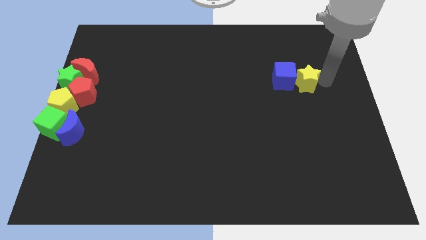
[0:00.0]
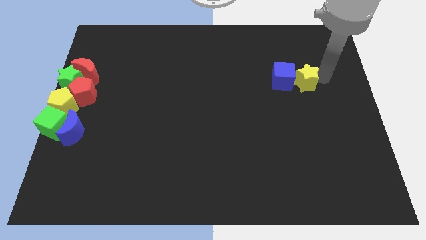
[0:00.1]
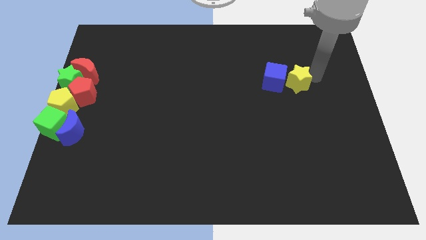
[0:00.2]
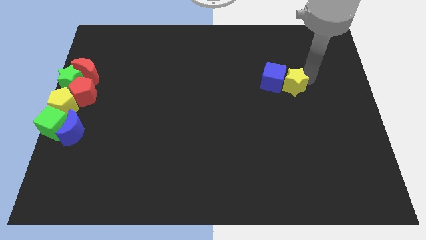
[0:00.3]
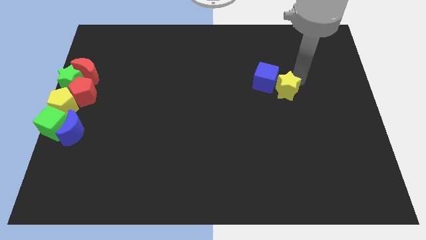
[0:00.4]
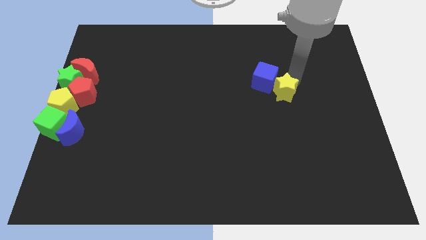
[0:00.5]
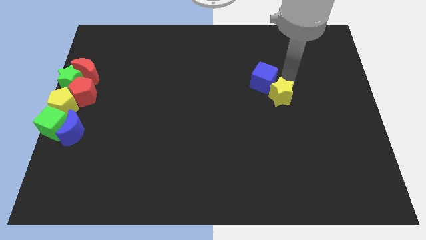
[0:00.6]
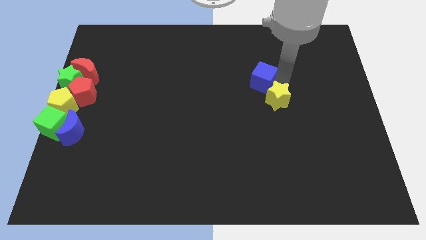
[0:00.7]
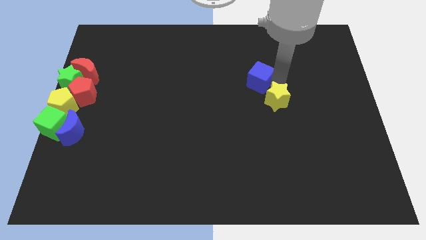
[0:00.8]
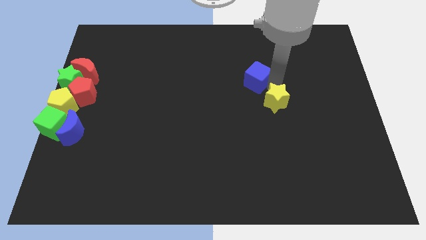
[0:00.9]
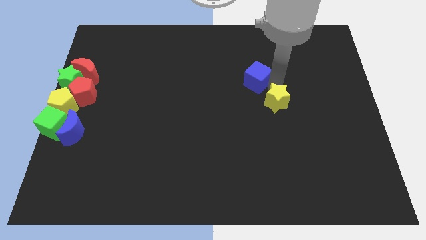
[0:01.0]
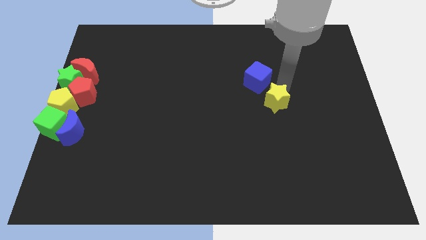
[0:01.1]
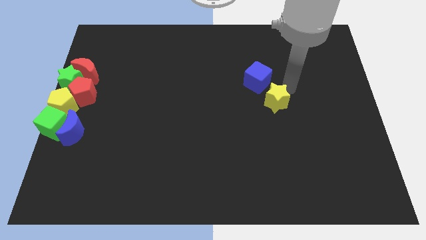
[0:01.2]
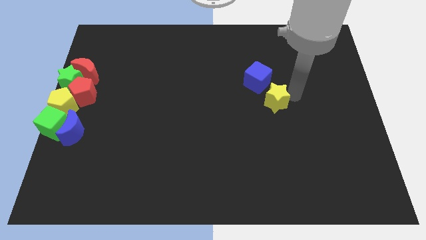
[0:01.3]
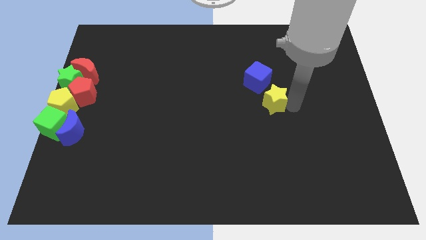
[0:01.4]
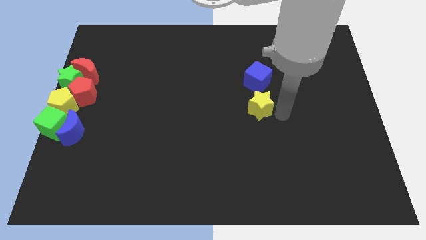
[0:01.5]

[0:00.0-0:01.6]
place the yellow star below the blue cube

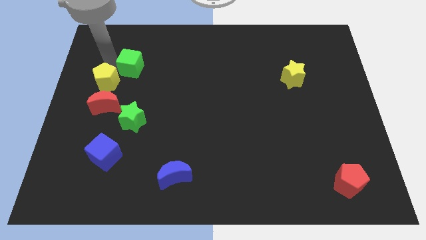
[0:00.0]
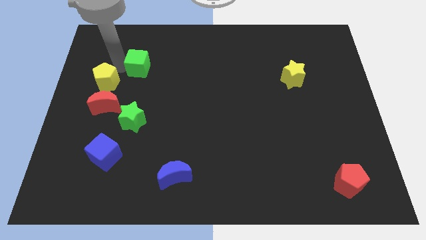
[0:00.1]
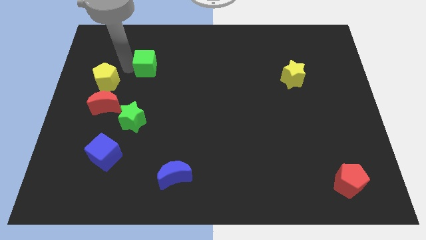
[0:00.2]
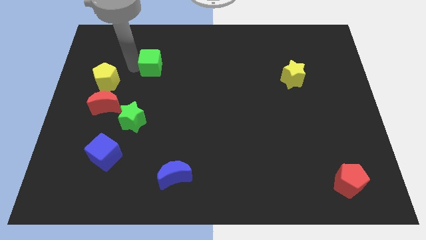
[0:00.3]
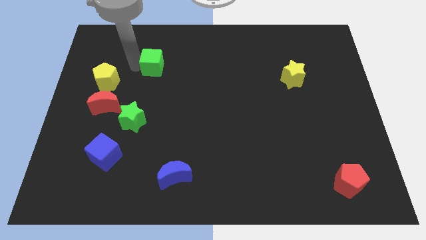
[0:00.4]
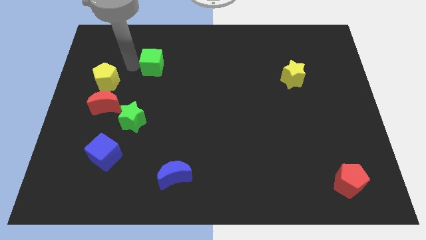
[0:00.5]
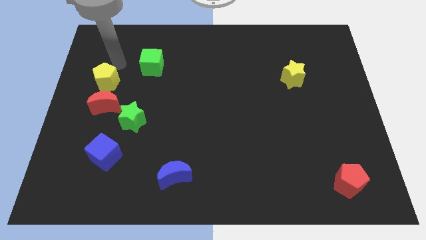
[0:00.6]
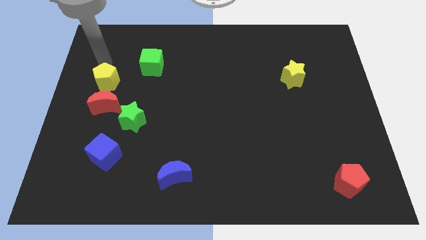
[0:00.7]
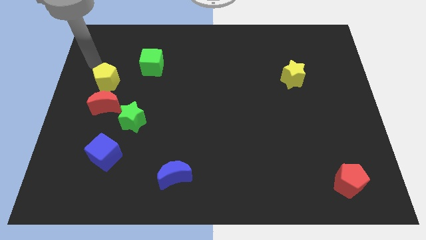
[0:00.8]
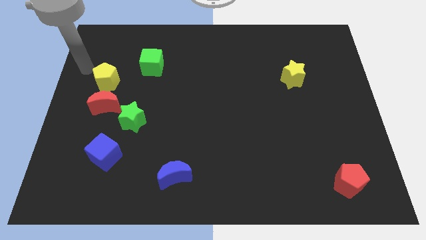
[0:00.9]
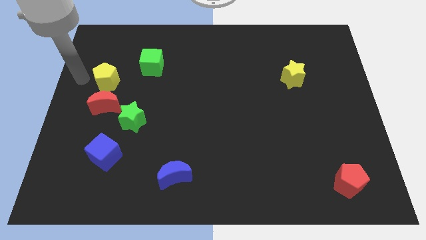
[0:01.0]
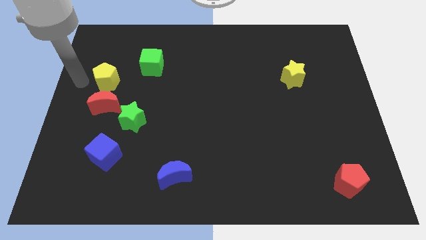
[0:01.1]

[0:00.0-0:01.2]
push the green cube slightly to the right side of the board

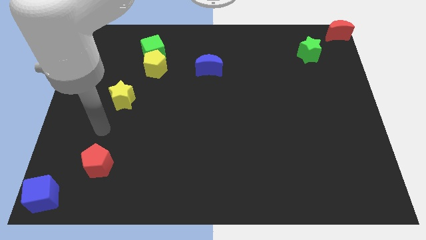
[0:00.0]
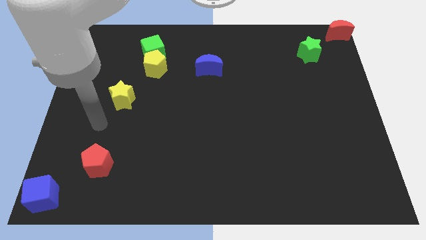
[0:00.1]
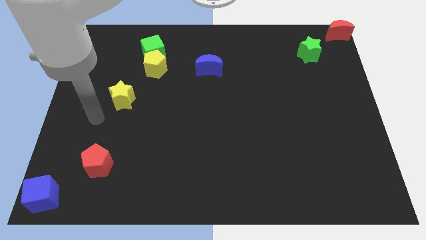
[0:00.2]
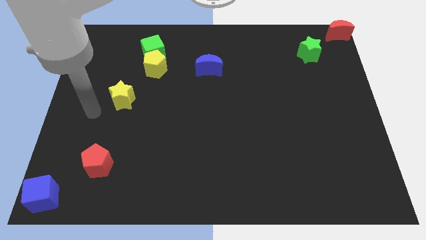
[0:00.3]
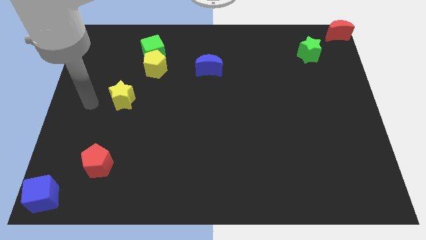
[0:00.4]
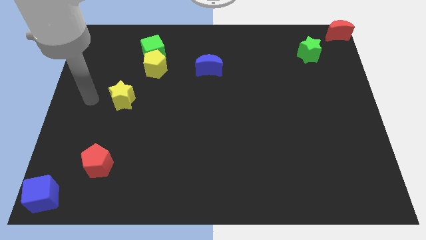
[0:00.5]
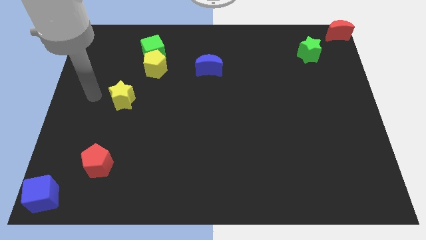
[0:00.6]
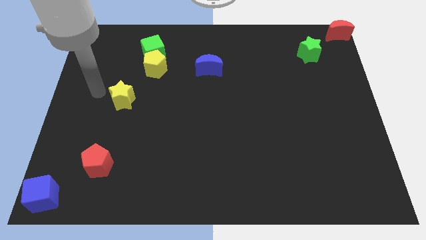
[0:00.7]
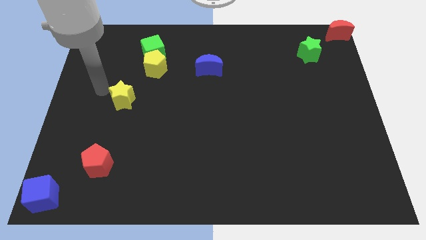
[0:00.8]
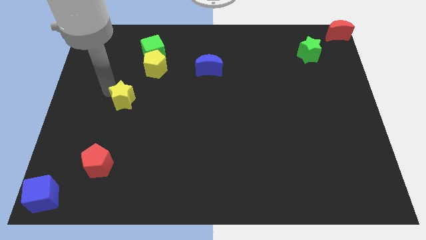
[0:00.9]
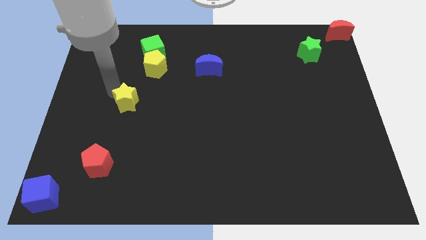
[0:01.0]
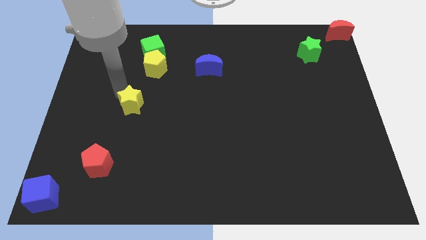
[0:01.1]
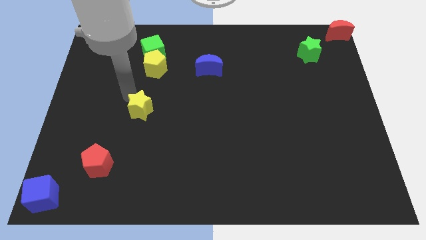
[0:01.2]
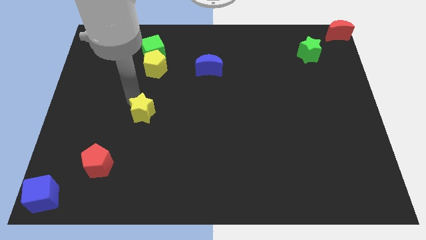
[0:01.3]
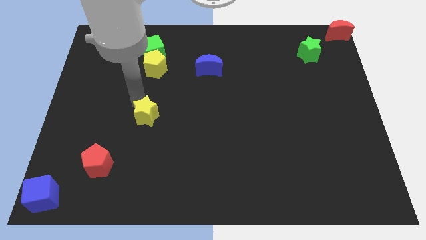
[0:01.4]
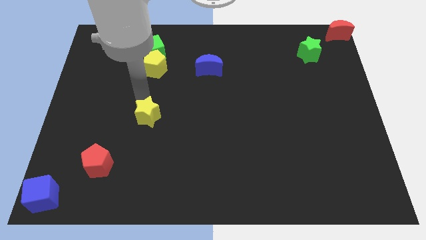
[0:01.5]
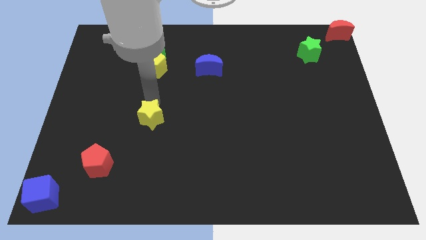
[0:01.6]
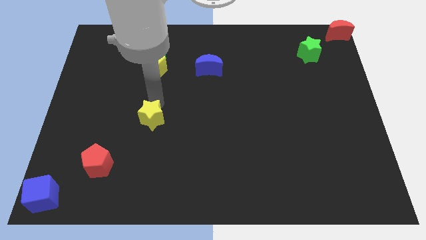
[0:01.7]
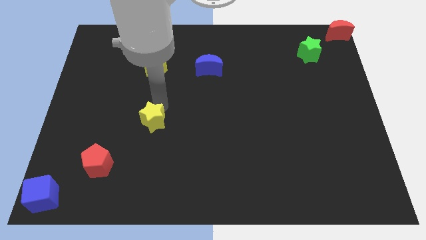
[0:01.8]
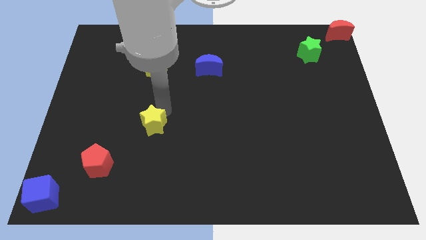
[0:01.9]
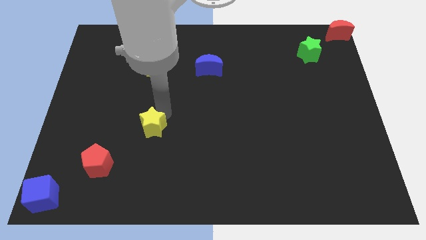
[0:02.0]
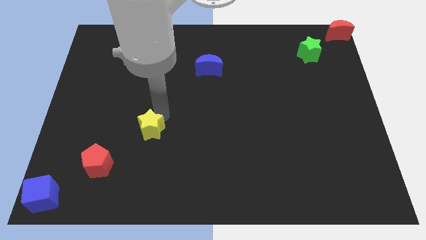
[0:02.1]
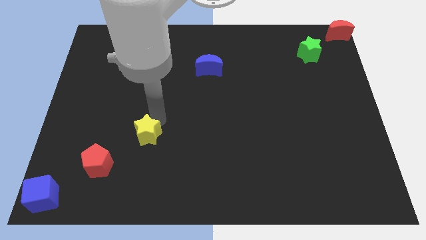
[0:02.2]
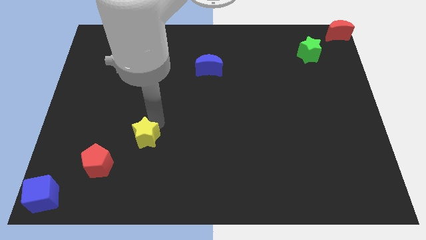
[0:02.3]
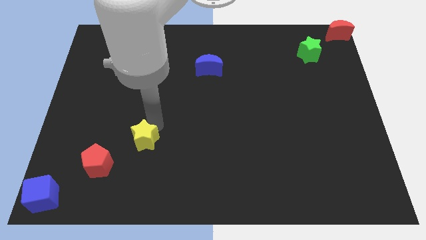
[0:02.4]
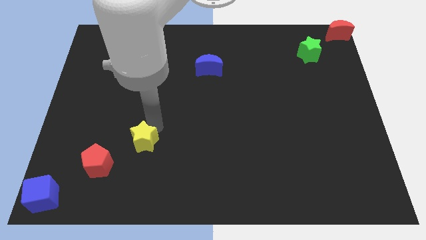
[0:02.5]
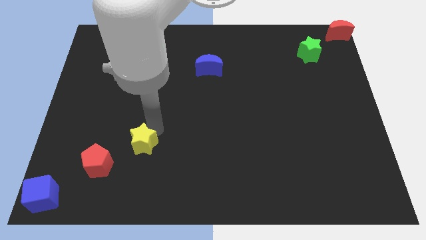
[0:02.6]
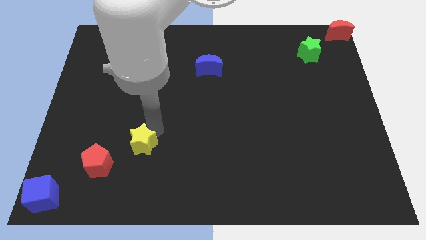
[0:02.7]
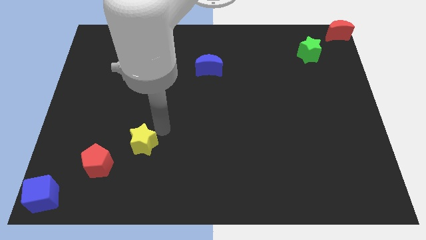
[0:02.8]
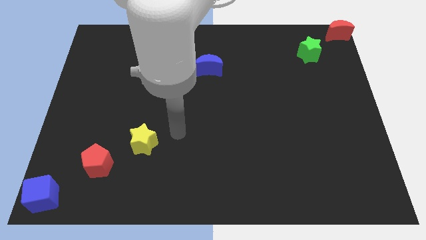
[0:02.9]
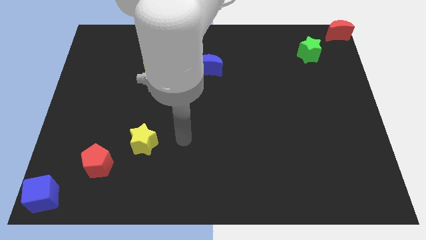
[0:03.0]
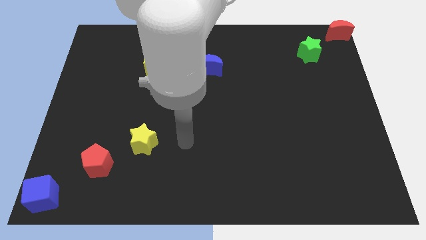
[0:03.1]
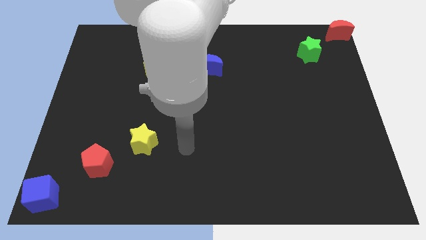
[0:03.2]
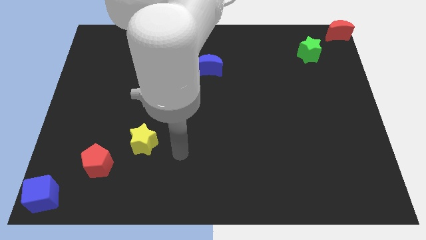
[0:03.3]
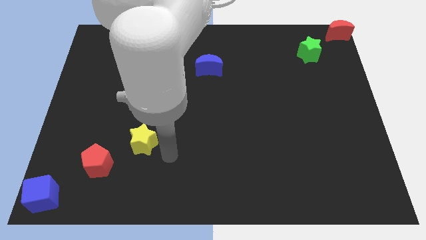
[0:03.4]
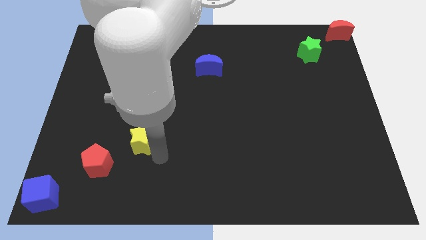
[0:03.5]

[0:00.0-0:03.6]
place the yellow star diagonal right of the red pentagon

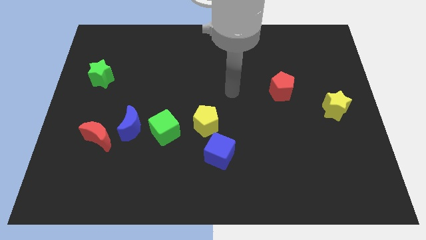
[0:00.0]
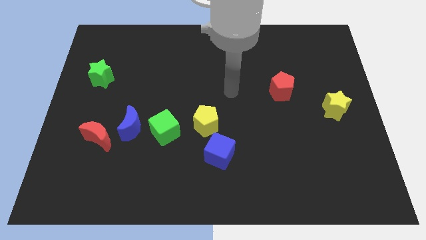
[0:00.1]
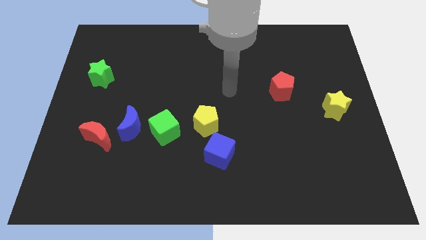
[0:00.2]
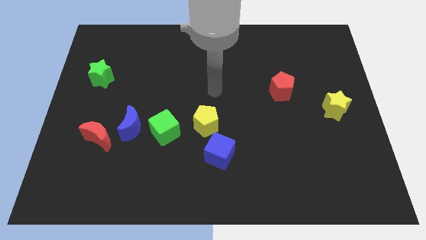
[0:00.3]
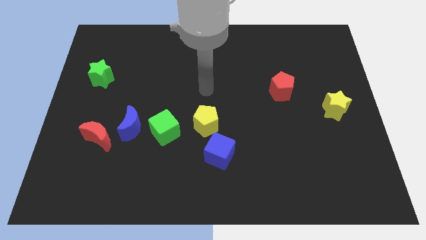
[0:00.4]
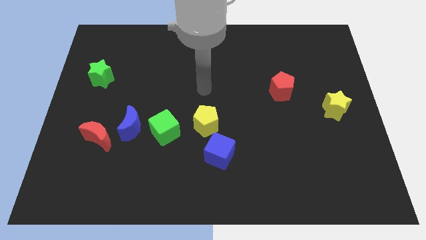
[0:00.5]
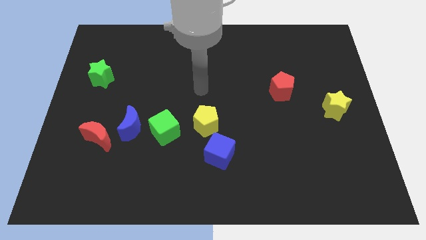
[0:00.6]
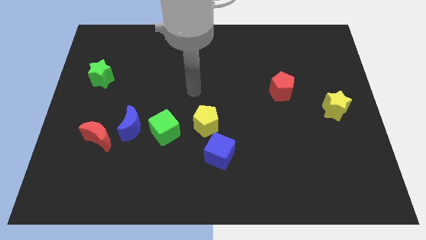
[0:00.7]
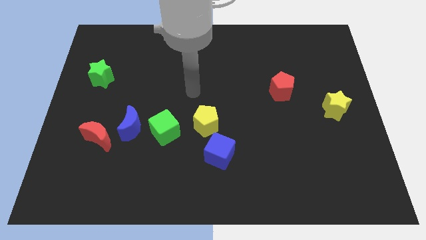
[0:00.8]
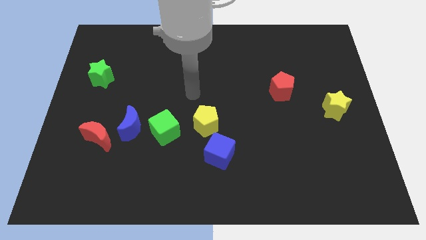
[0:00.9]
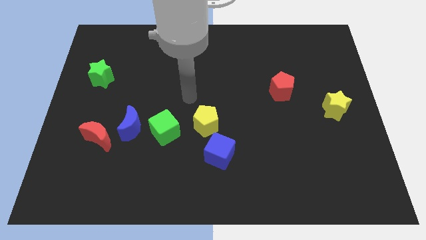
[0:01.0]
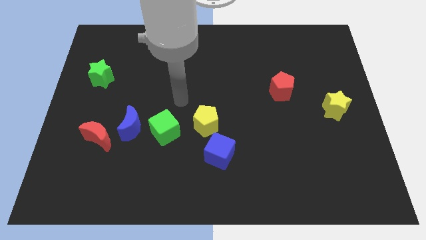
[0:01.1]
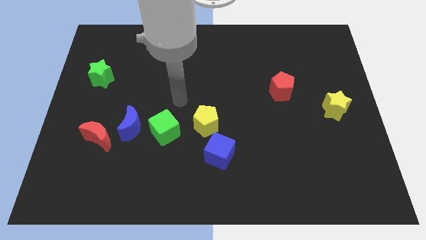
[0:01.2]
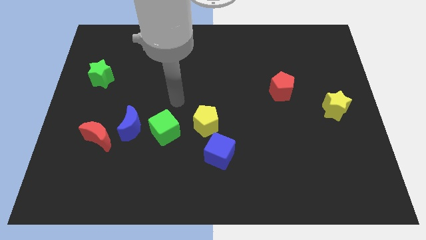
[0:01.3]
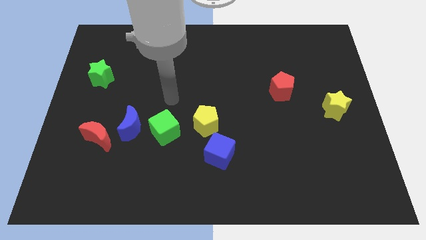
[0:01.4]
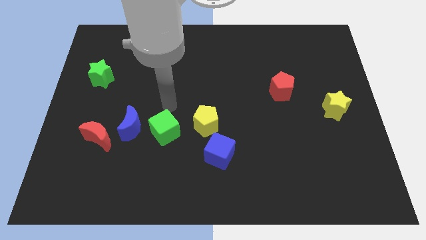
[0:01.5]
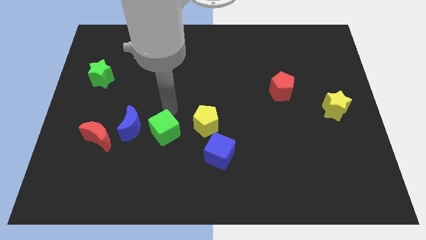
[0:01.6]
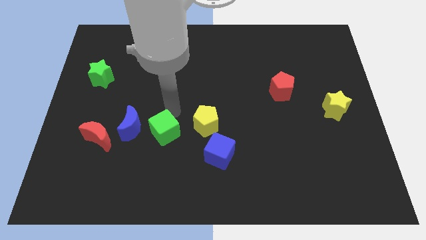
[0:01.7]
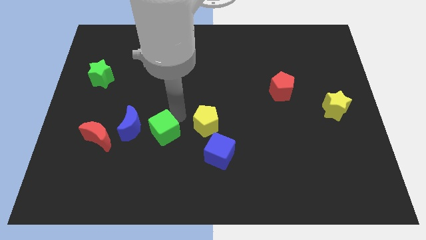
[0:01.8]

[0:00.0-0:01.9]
point your hand above the green cube

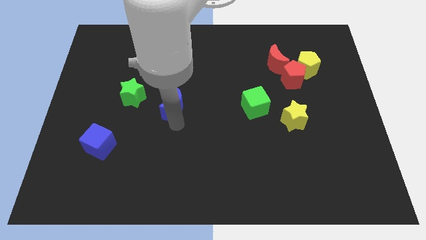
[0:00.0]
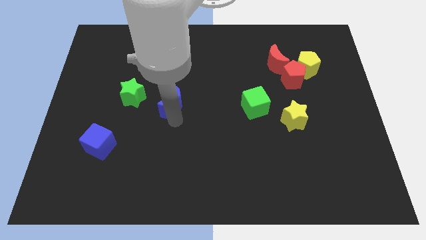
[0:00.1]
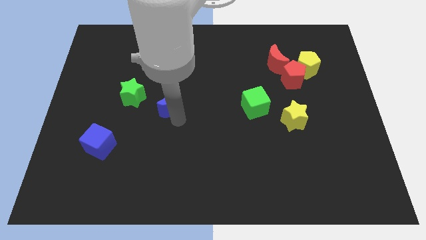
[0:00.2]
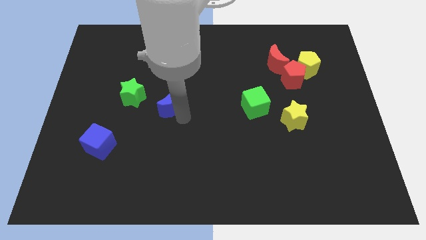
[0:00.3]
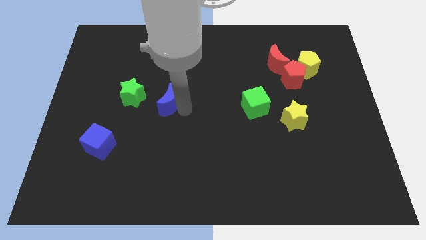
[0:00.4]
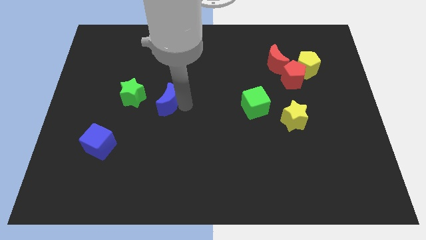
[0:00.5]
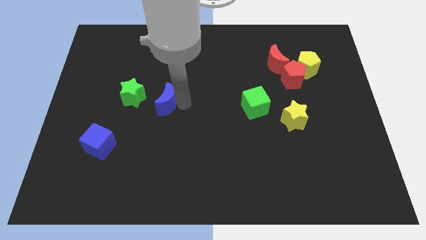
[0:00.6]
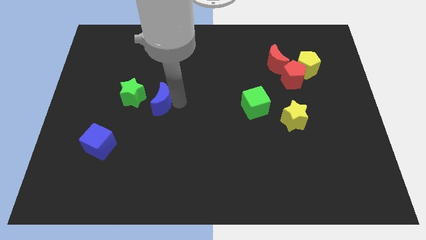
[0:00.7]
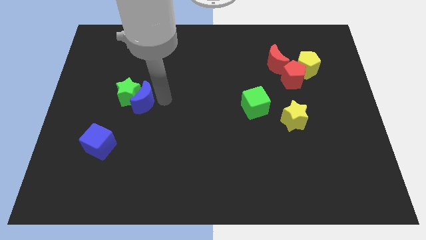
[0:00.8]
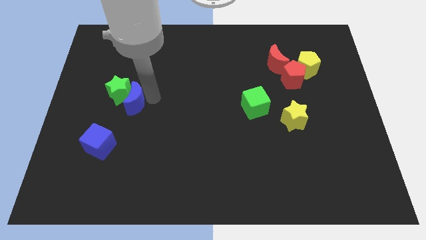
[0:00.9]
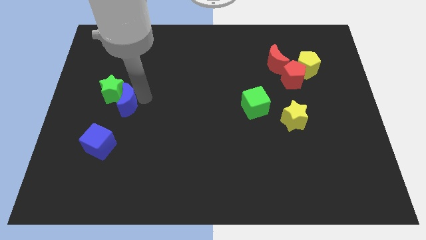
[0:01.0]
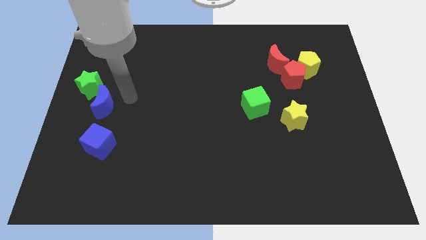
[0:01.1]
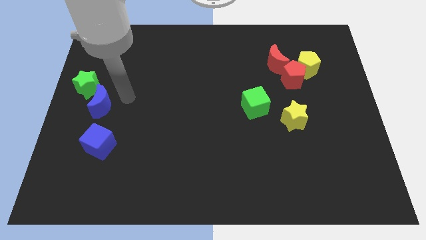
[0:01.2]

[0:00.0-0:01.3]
push the blue crescent into the green star
